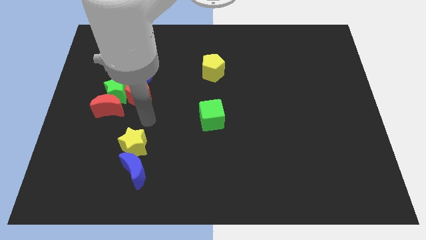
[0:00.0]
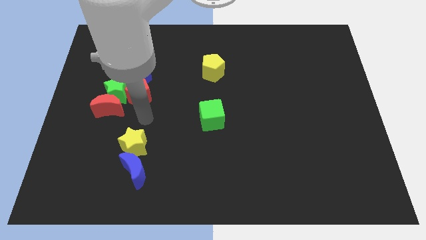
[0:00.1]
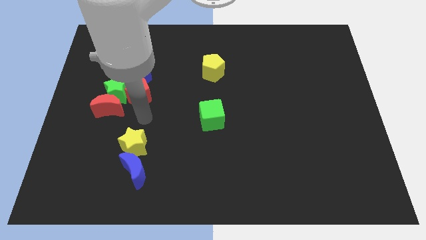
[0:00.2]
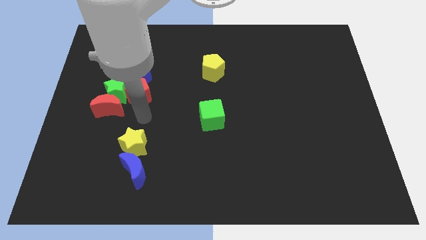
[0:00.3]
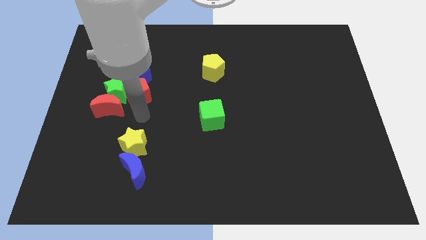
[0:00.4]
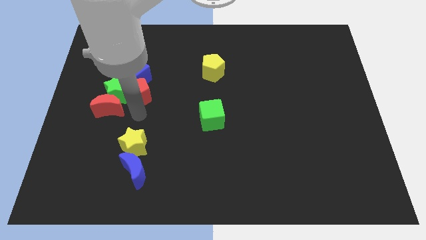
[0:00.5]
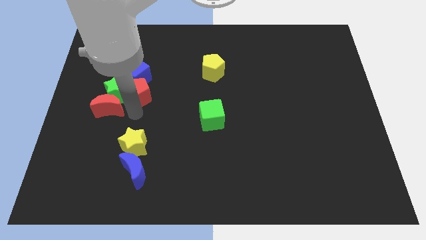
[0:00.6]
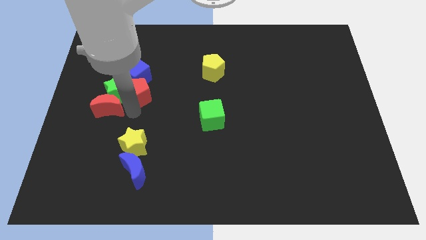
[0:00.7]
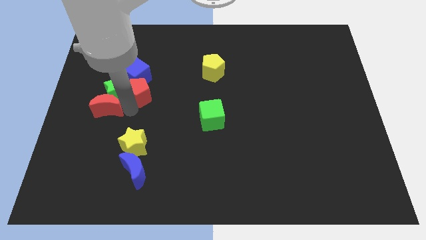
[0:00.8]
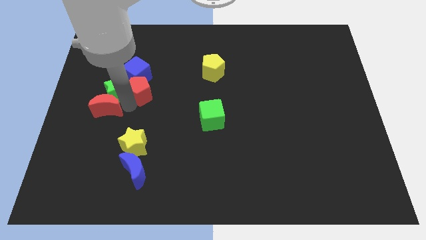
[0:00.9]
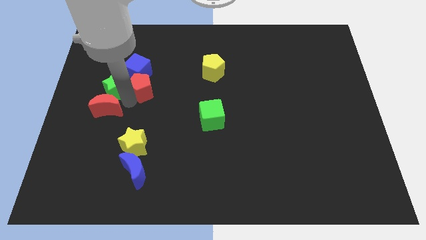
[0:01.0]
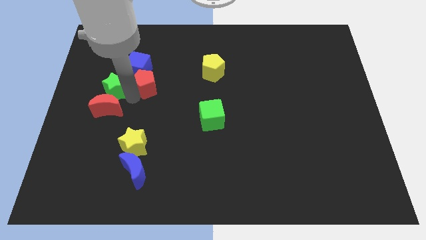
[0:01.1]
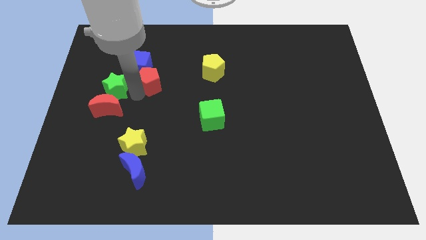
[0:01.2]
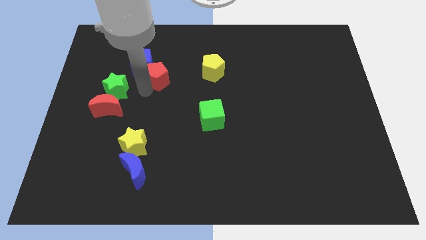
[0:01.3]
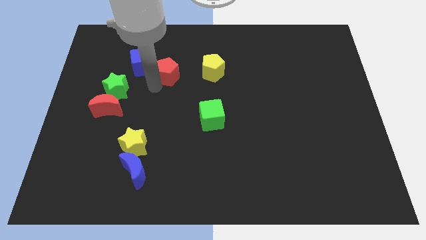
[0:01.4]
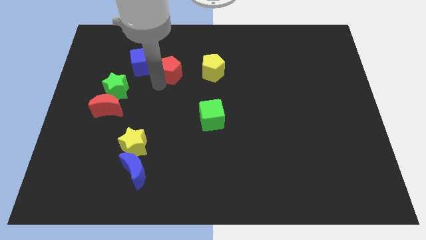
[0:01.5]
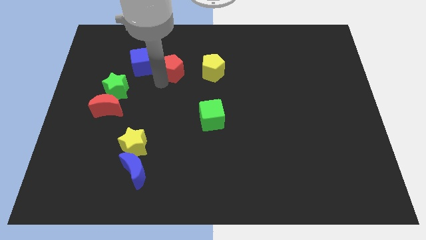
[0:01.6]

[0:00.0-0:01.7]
move the red pentagon away from the green star

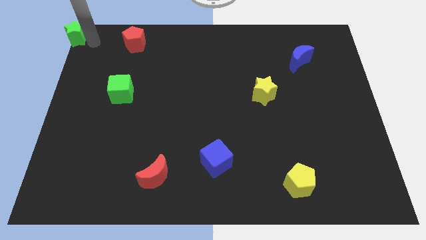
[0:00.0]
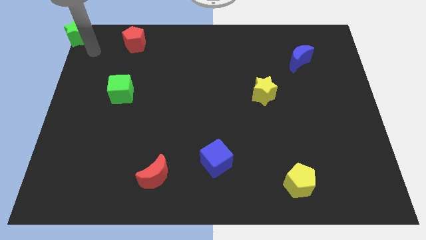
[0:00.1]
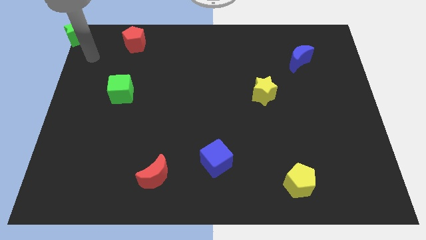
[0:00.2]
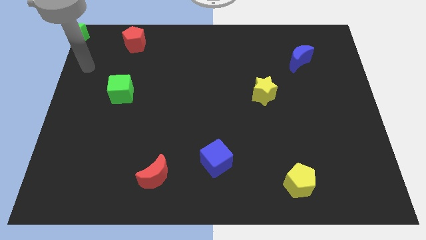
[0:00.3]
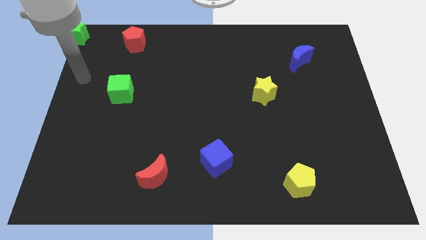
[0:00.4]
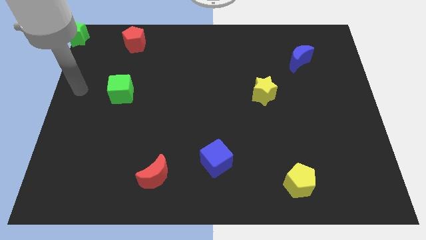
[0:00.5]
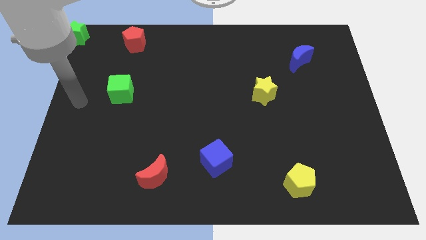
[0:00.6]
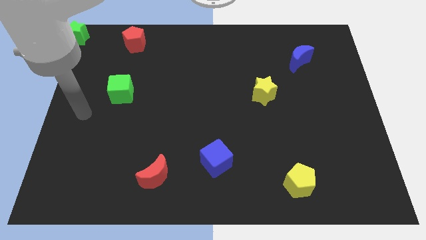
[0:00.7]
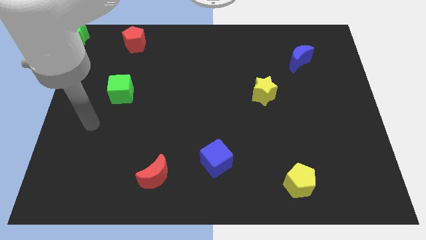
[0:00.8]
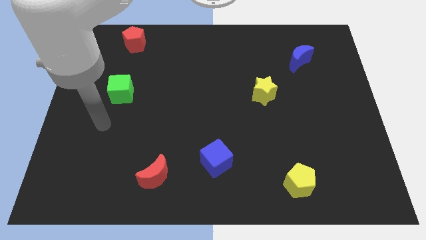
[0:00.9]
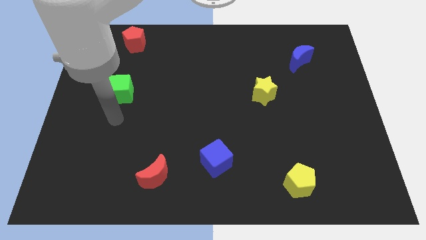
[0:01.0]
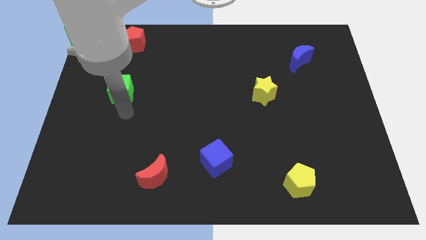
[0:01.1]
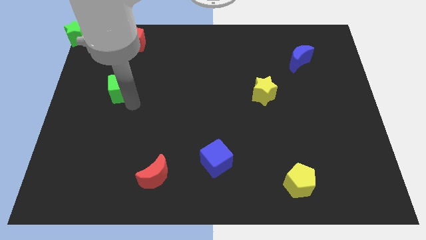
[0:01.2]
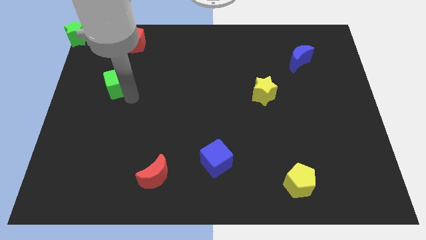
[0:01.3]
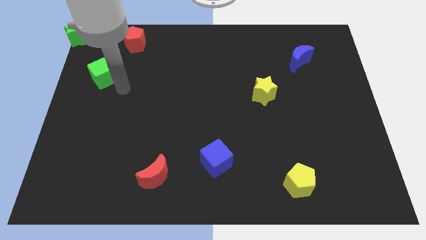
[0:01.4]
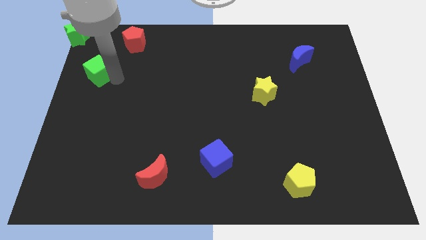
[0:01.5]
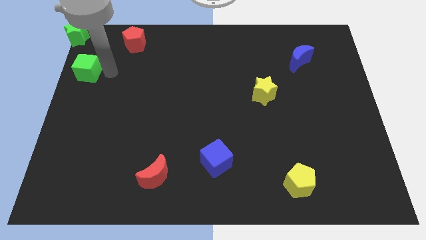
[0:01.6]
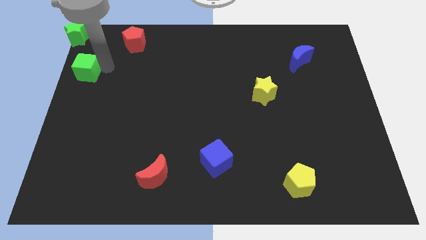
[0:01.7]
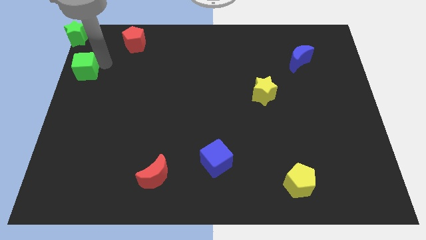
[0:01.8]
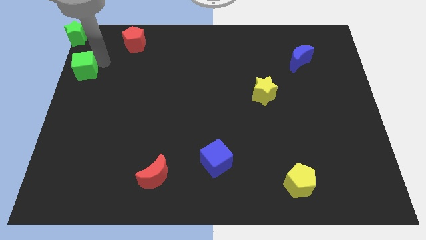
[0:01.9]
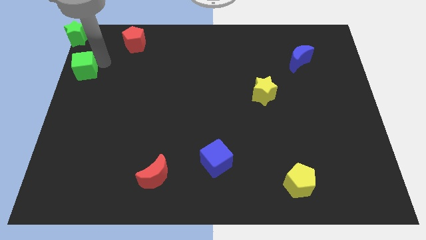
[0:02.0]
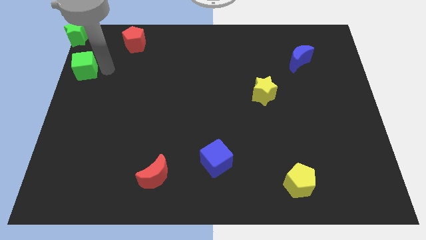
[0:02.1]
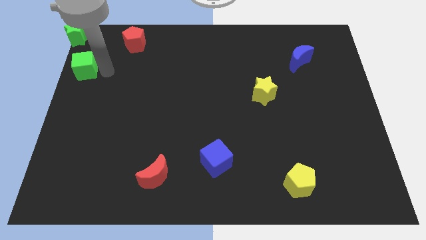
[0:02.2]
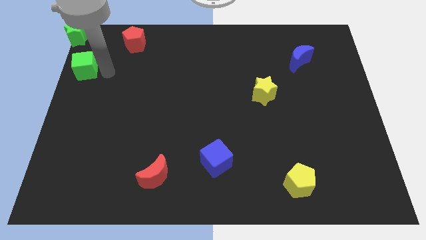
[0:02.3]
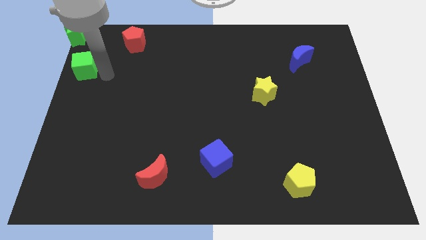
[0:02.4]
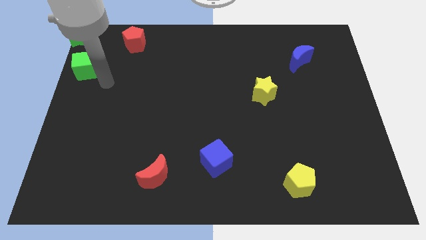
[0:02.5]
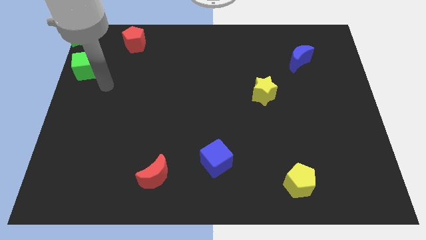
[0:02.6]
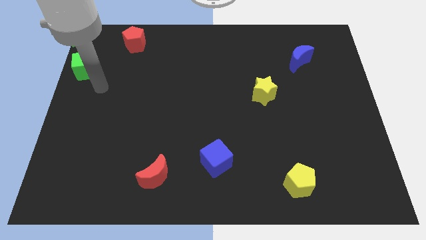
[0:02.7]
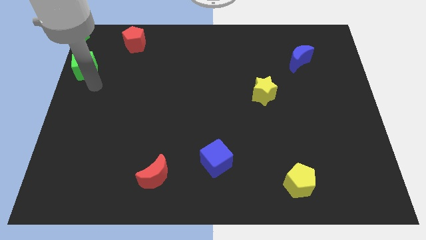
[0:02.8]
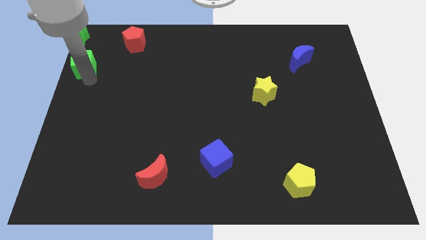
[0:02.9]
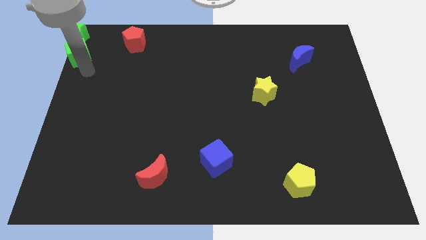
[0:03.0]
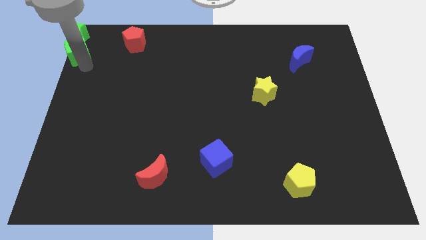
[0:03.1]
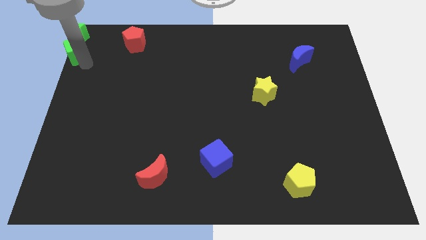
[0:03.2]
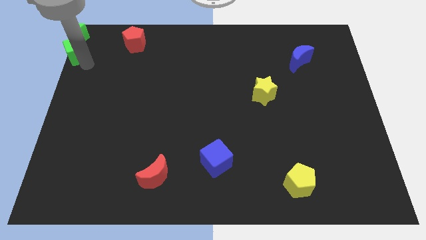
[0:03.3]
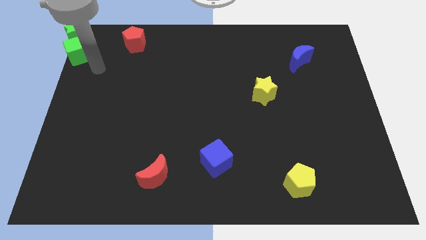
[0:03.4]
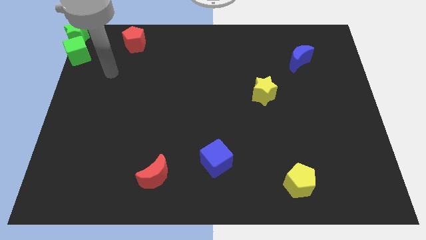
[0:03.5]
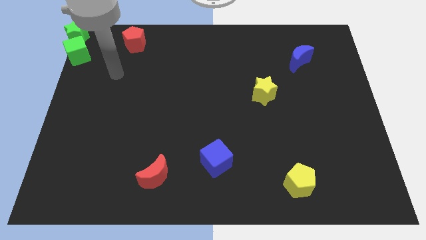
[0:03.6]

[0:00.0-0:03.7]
push the green cube into the green star

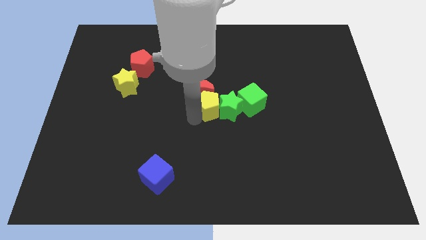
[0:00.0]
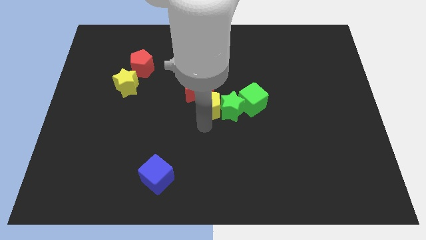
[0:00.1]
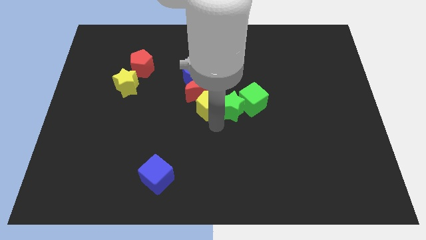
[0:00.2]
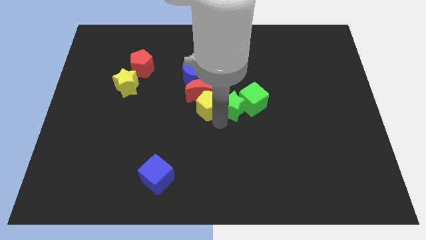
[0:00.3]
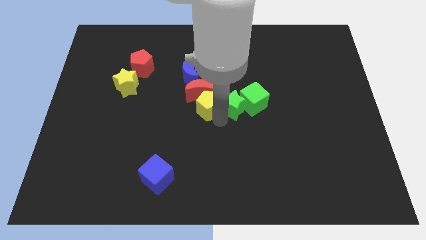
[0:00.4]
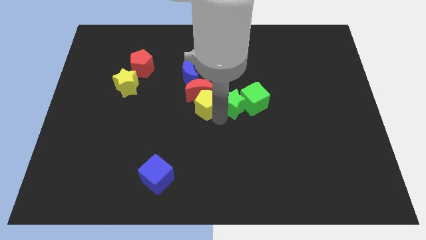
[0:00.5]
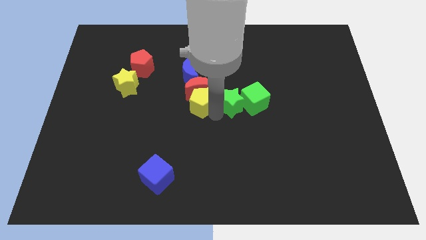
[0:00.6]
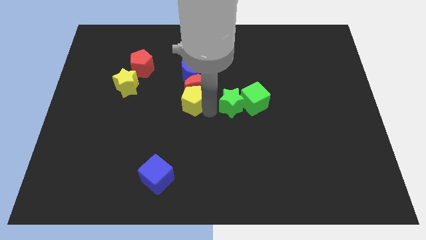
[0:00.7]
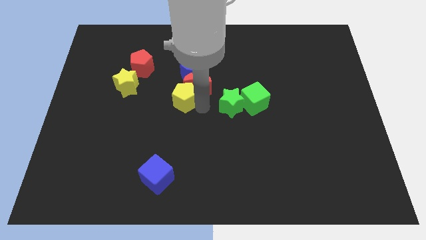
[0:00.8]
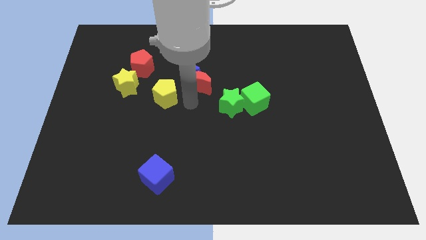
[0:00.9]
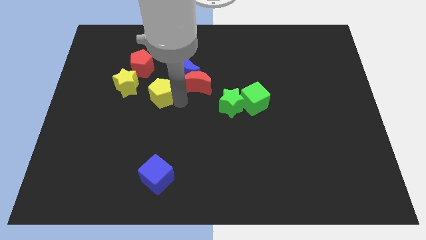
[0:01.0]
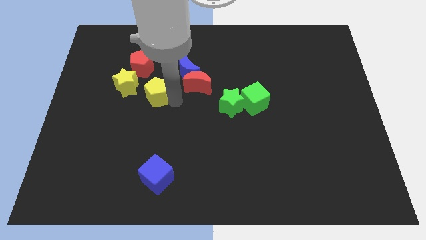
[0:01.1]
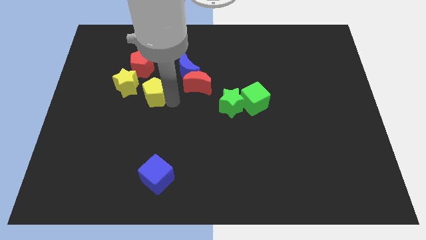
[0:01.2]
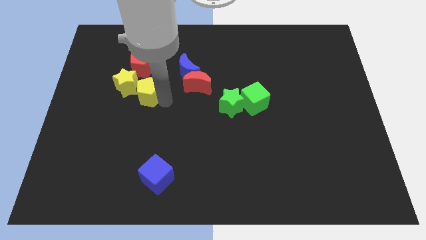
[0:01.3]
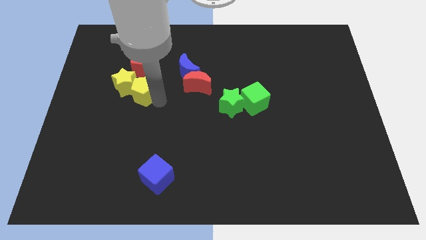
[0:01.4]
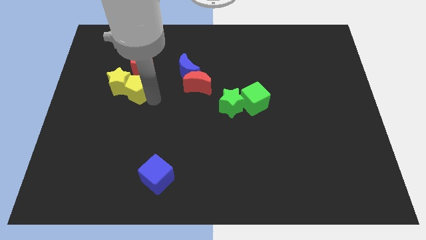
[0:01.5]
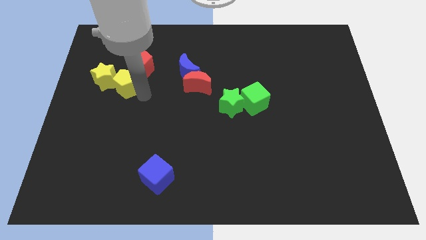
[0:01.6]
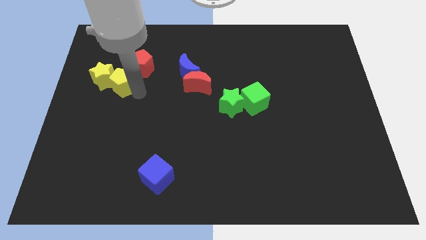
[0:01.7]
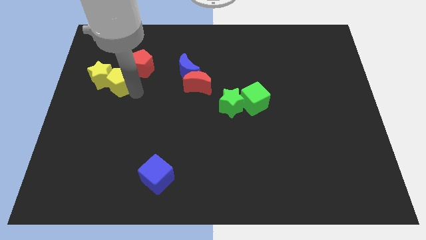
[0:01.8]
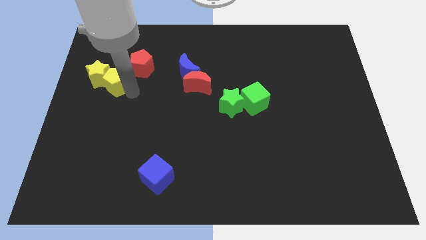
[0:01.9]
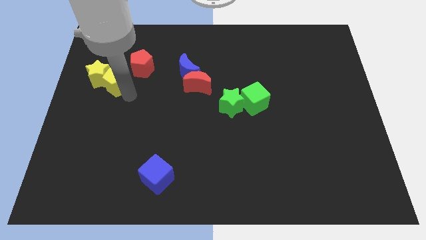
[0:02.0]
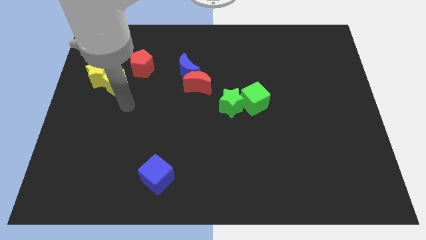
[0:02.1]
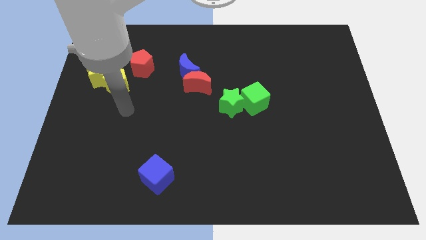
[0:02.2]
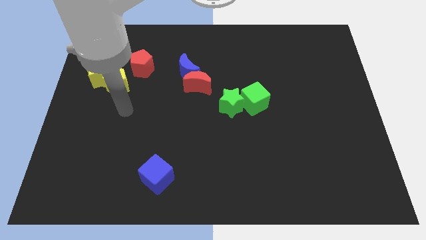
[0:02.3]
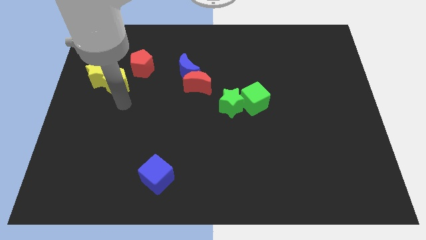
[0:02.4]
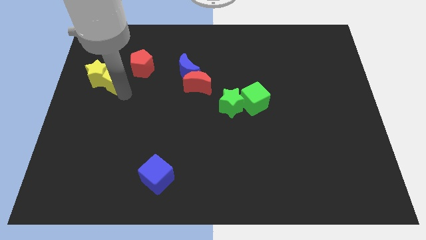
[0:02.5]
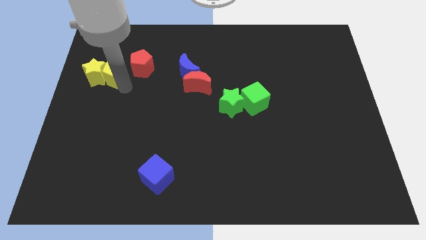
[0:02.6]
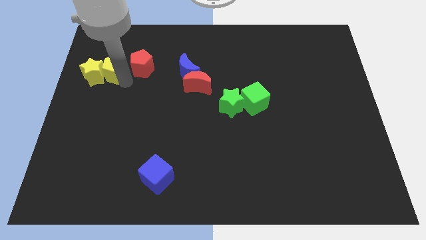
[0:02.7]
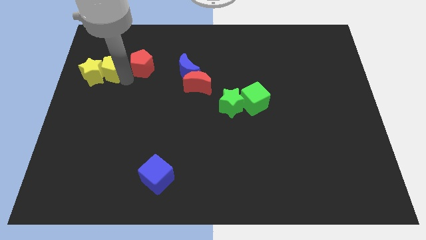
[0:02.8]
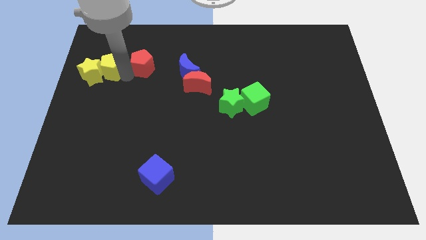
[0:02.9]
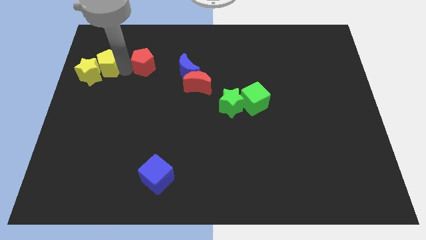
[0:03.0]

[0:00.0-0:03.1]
push yellow pentagon into yellow star

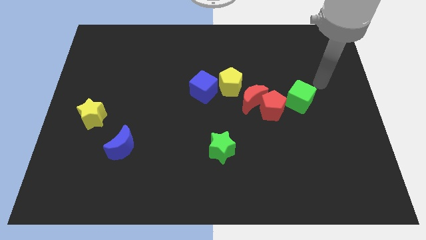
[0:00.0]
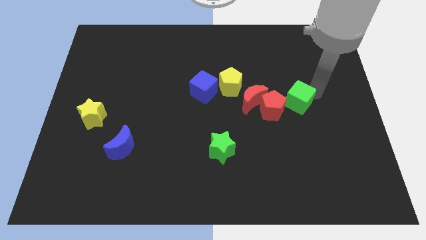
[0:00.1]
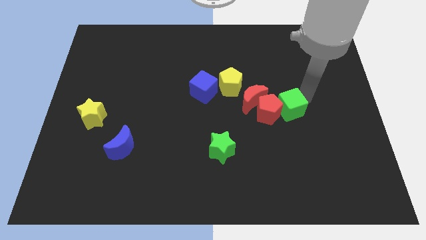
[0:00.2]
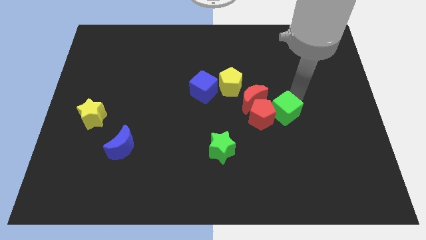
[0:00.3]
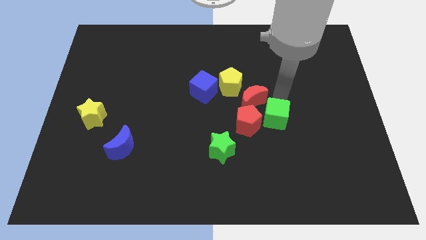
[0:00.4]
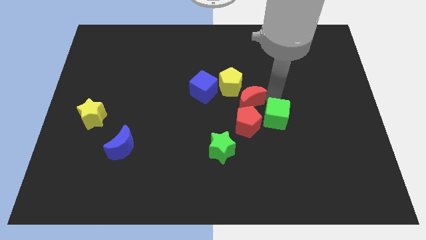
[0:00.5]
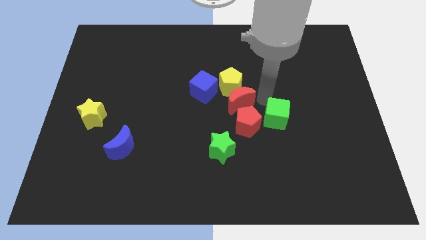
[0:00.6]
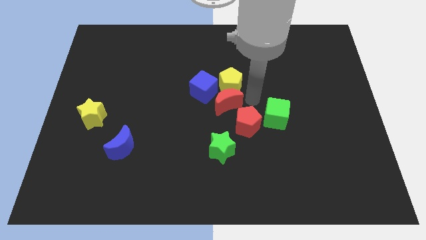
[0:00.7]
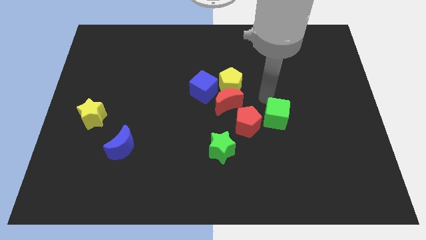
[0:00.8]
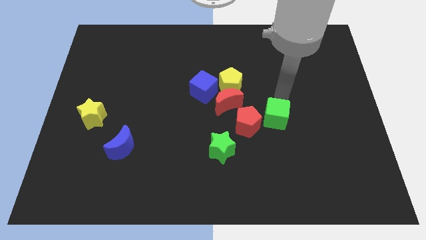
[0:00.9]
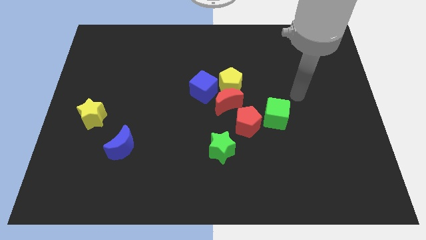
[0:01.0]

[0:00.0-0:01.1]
move red moon below yellow pentagon
